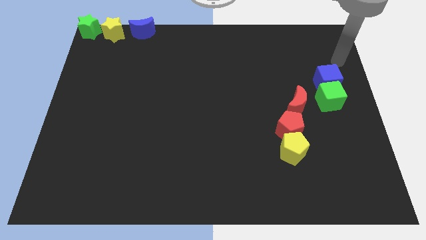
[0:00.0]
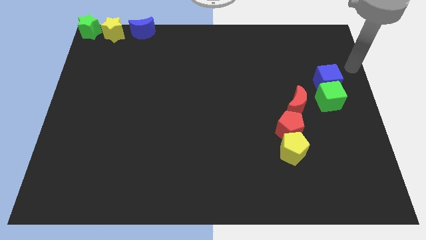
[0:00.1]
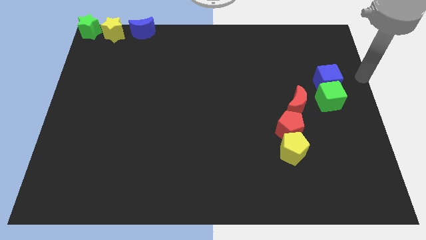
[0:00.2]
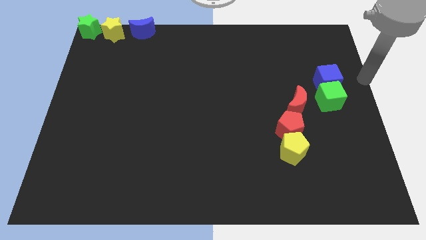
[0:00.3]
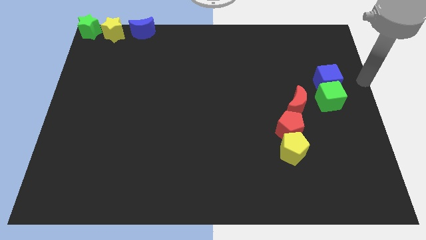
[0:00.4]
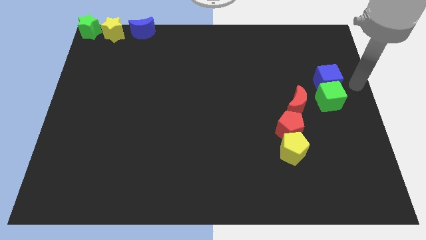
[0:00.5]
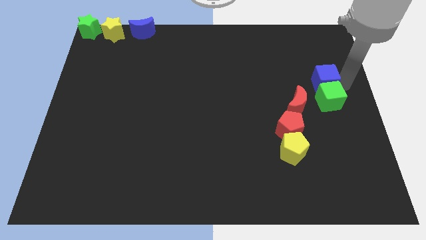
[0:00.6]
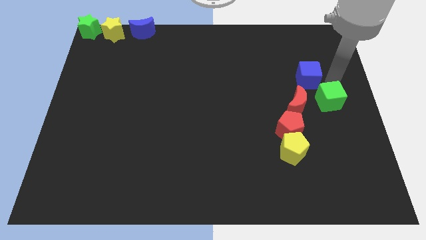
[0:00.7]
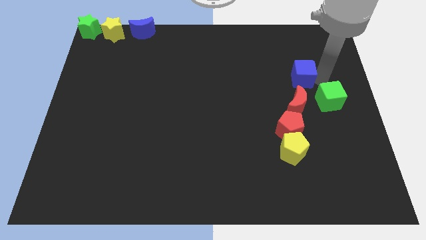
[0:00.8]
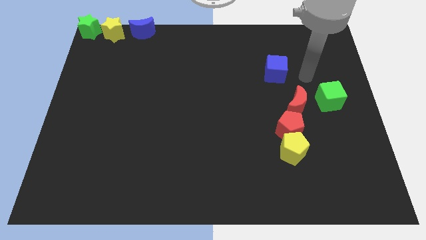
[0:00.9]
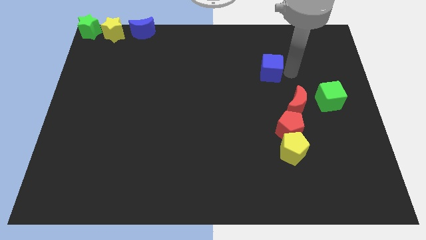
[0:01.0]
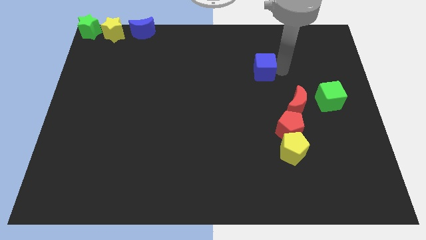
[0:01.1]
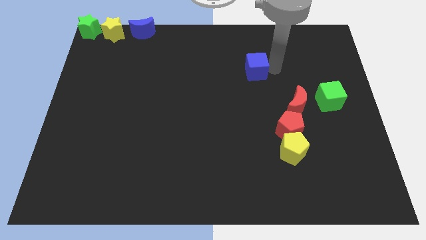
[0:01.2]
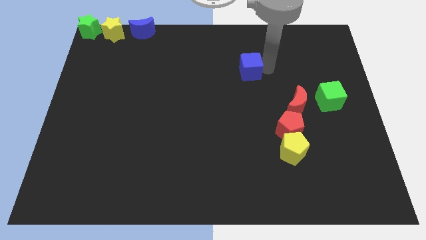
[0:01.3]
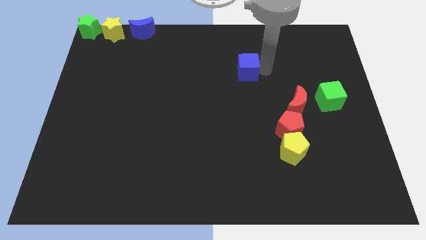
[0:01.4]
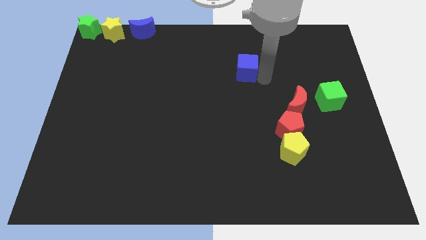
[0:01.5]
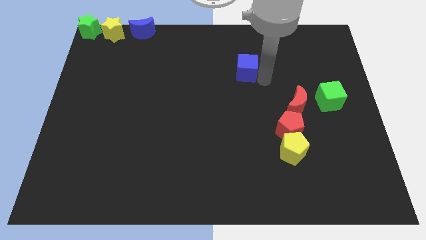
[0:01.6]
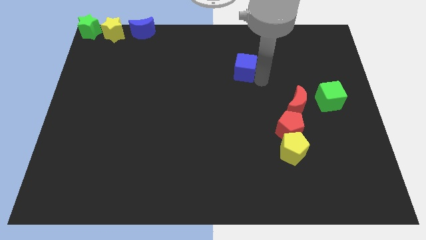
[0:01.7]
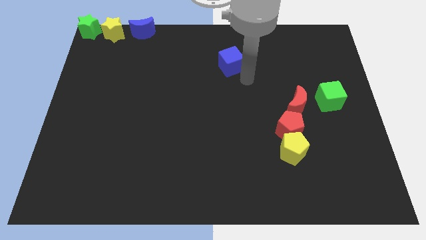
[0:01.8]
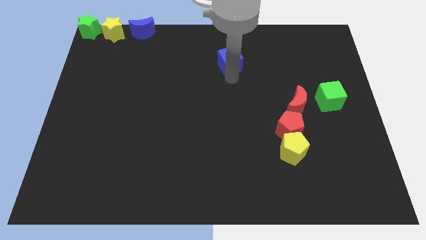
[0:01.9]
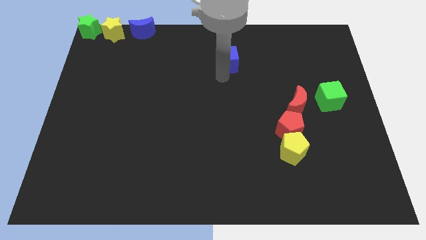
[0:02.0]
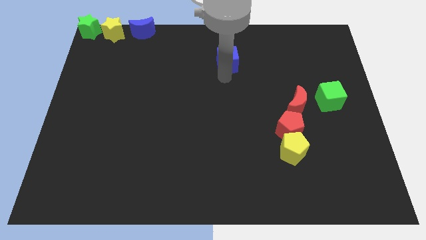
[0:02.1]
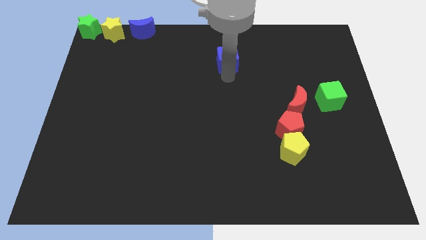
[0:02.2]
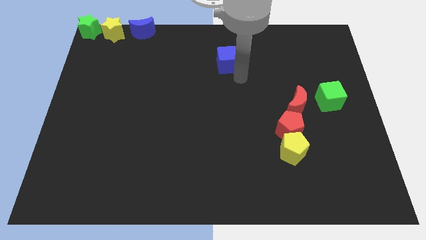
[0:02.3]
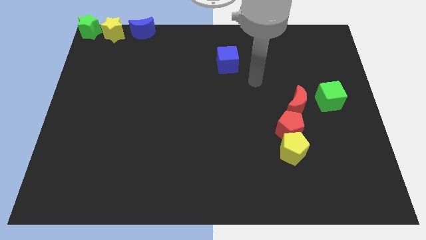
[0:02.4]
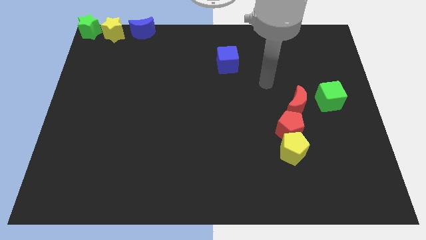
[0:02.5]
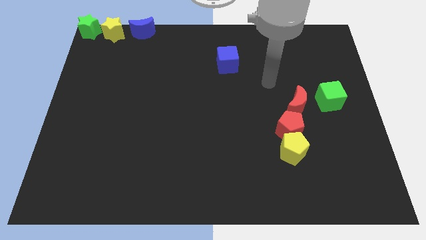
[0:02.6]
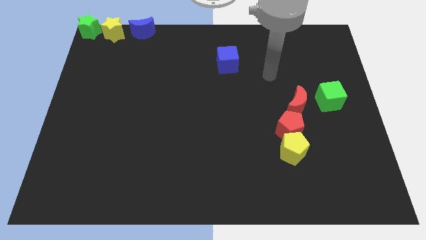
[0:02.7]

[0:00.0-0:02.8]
push the blue cube towards the top center

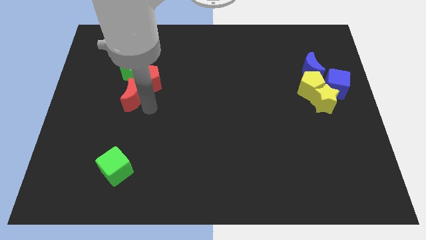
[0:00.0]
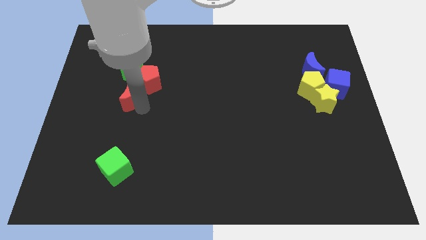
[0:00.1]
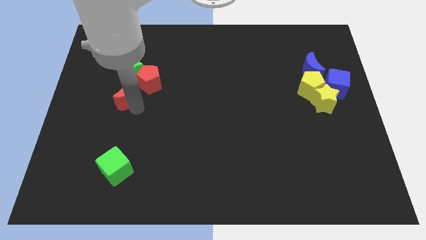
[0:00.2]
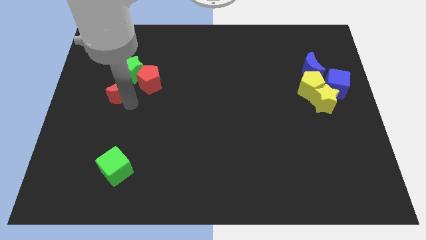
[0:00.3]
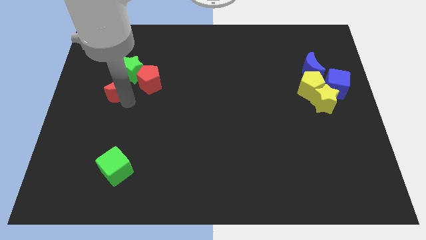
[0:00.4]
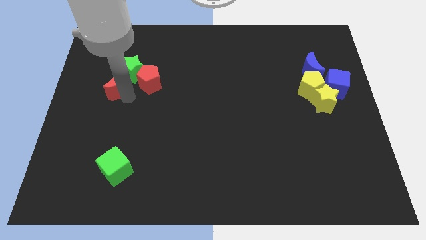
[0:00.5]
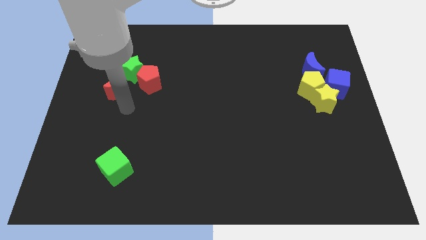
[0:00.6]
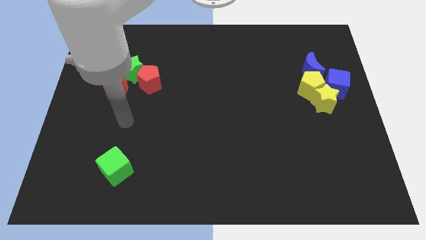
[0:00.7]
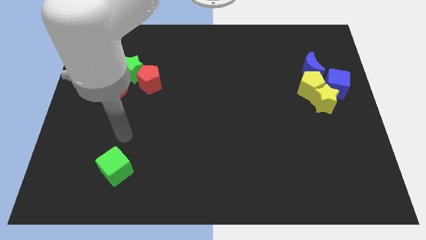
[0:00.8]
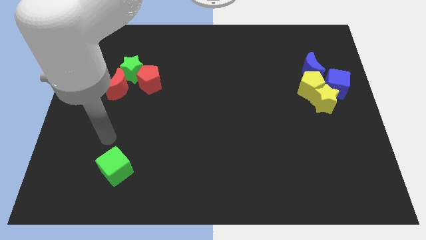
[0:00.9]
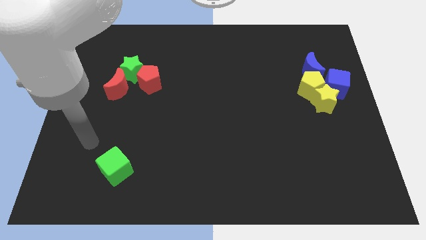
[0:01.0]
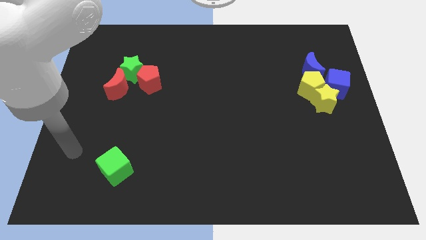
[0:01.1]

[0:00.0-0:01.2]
place the red crescent parallel to the red pentagon at the left side

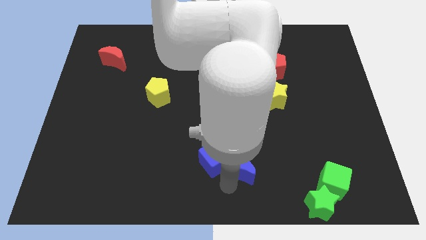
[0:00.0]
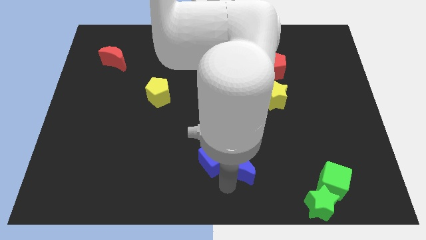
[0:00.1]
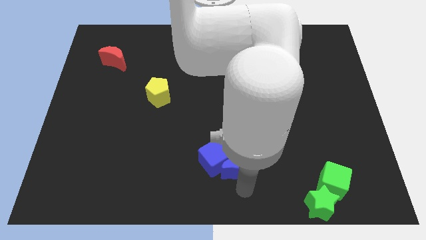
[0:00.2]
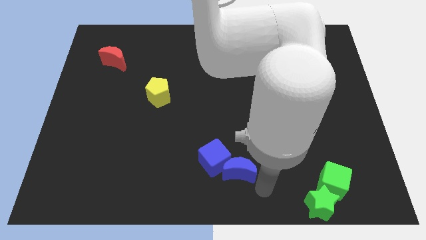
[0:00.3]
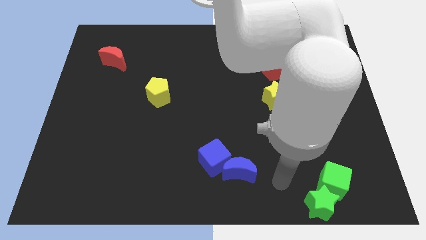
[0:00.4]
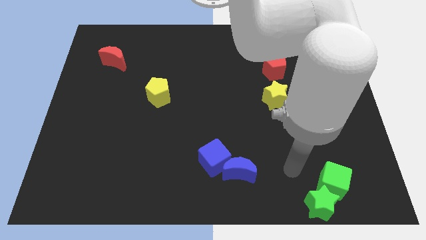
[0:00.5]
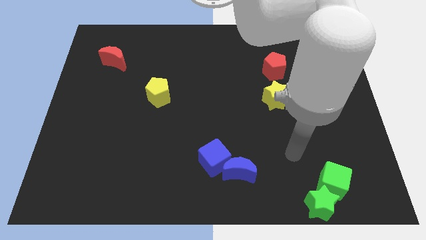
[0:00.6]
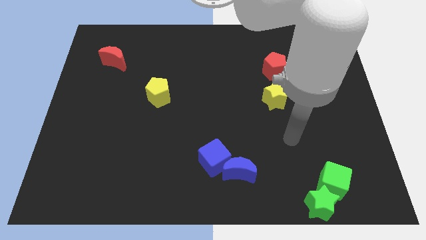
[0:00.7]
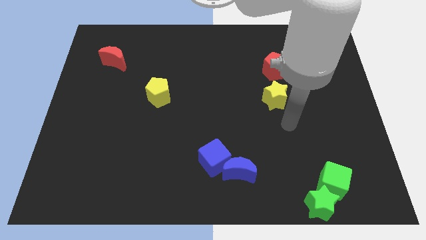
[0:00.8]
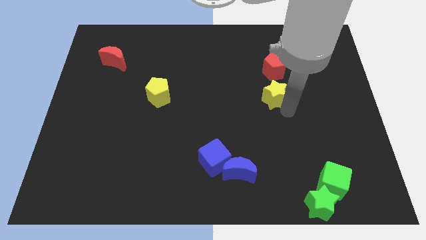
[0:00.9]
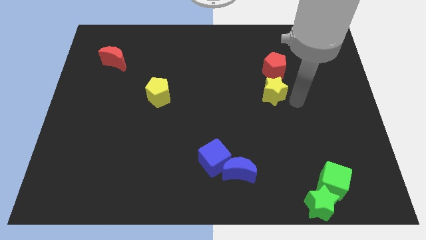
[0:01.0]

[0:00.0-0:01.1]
move your arm towards the yellow star

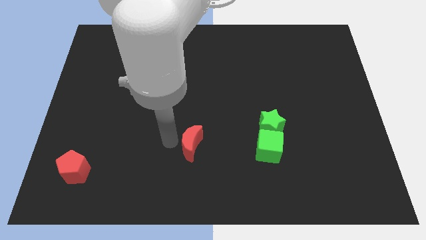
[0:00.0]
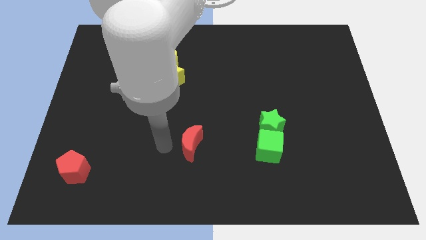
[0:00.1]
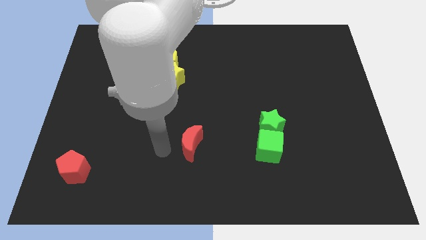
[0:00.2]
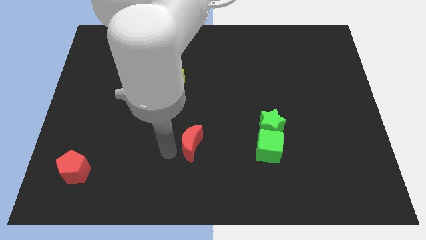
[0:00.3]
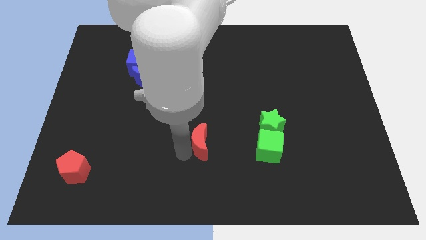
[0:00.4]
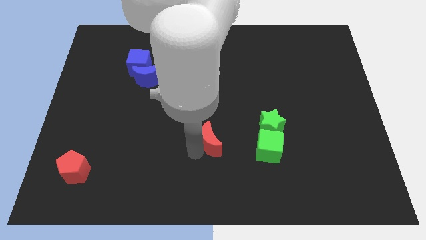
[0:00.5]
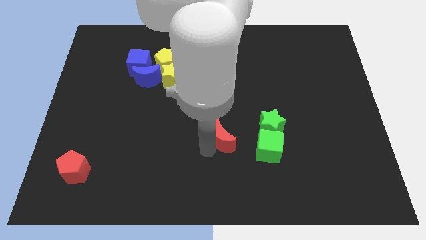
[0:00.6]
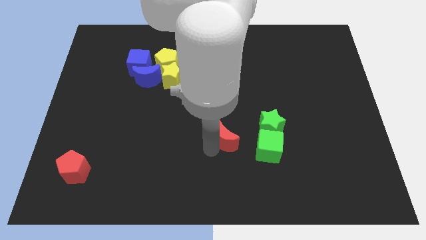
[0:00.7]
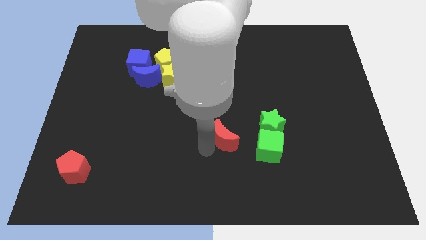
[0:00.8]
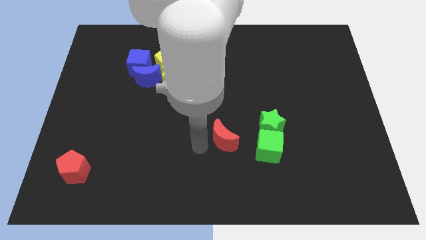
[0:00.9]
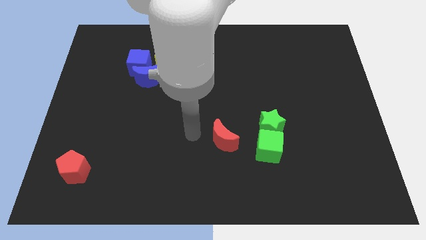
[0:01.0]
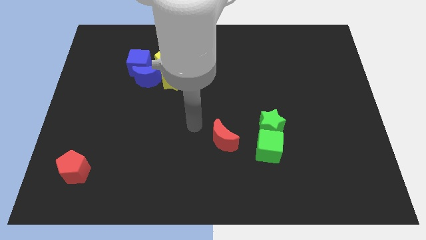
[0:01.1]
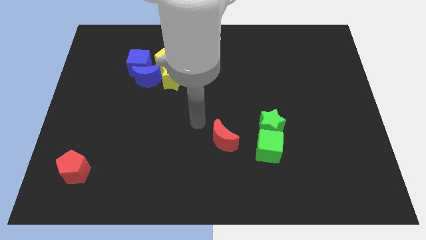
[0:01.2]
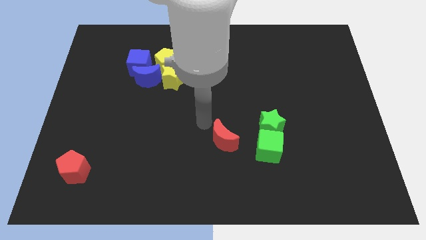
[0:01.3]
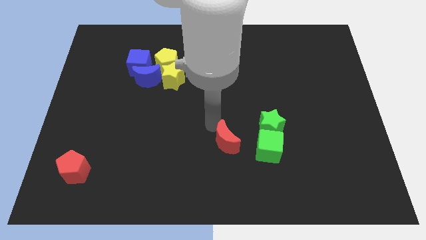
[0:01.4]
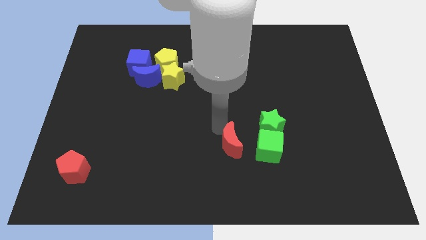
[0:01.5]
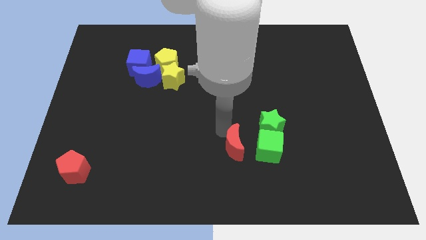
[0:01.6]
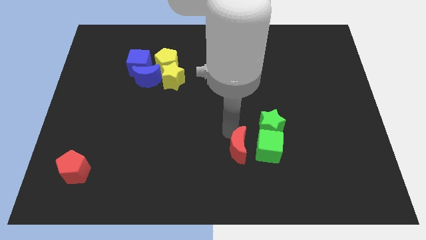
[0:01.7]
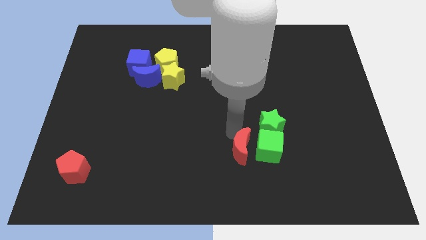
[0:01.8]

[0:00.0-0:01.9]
push the red crescent to the left of the green cube

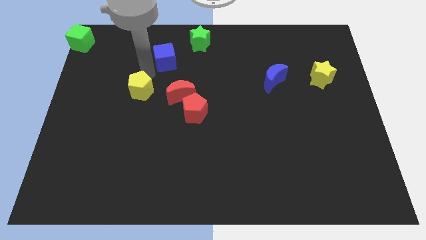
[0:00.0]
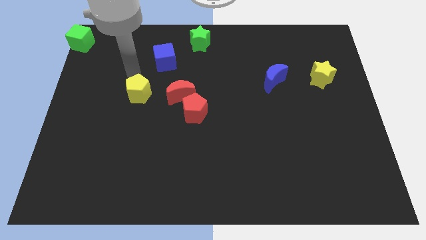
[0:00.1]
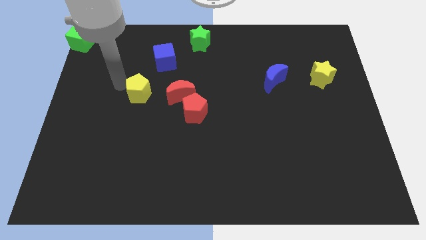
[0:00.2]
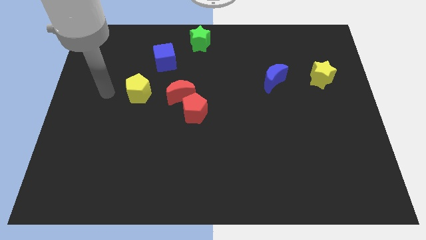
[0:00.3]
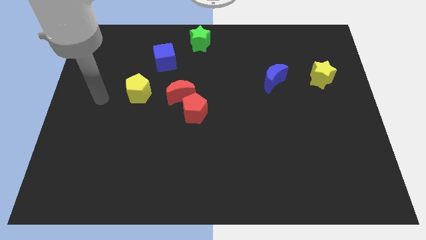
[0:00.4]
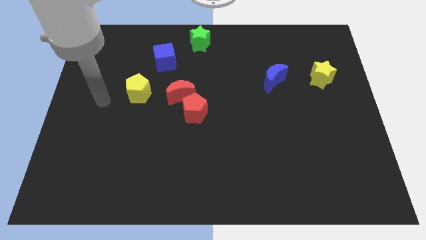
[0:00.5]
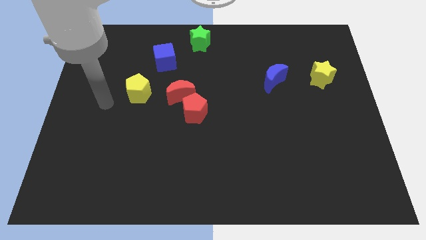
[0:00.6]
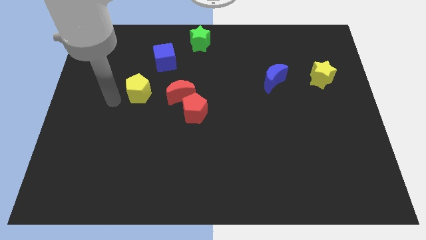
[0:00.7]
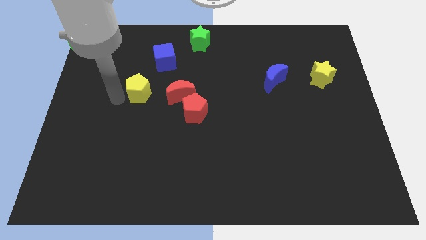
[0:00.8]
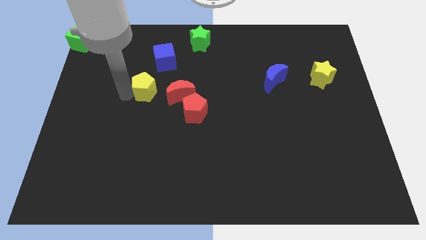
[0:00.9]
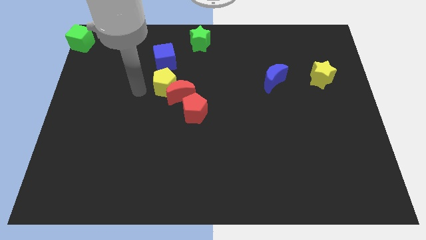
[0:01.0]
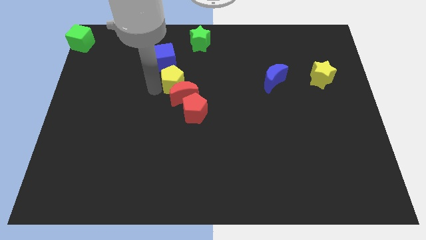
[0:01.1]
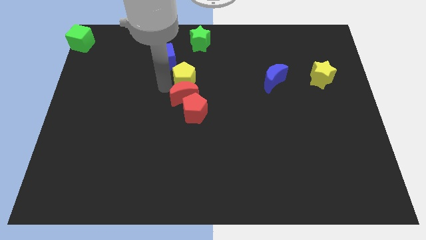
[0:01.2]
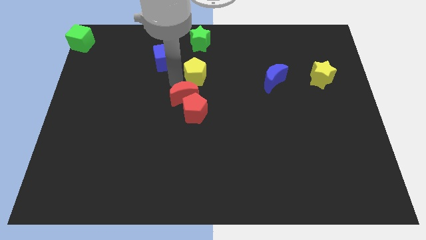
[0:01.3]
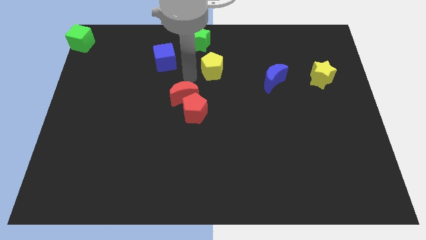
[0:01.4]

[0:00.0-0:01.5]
put the yellow pentagon below the green star

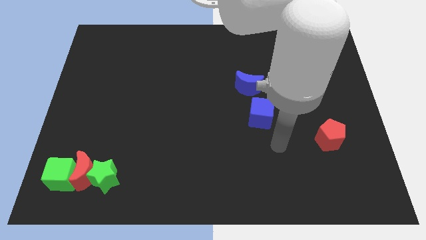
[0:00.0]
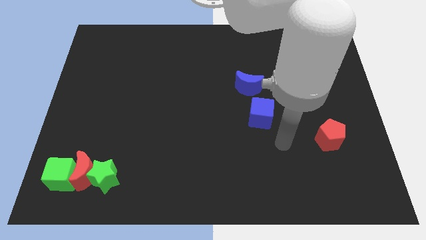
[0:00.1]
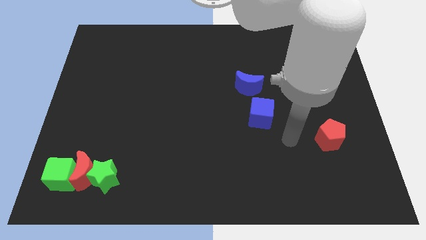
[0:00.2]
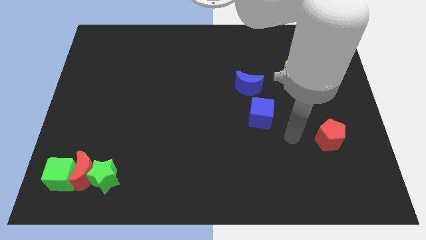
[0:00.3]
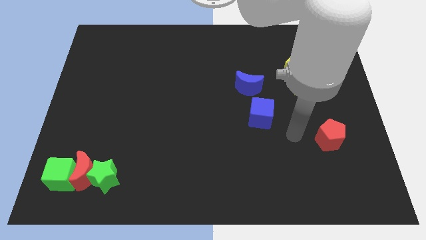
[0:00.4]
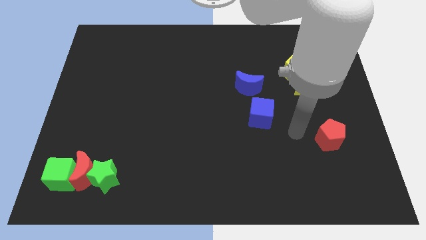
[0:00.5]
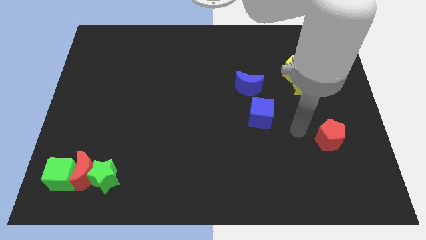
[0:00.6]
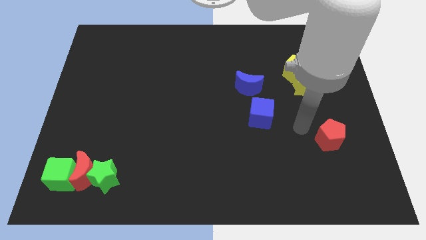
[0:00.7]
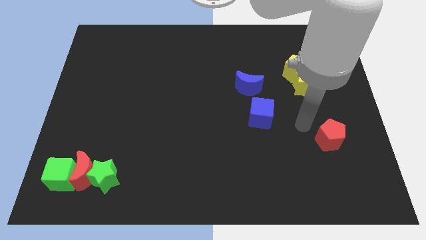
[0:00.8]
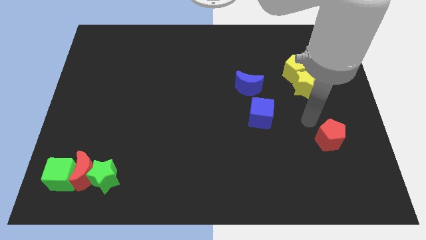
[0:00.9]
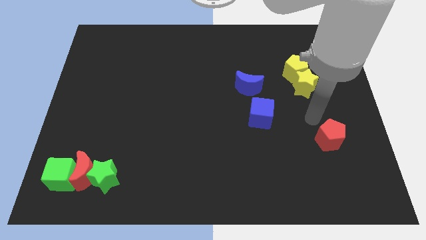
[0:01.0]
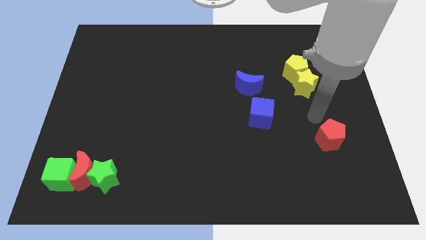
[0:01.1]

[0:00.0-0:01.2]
move your arm to the top of the red pentagon
